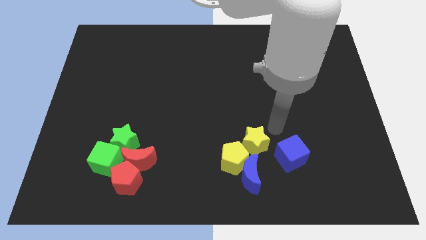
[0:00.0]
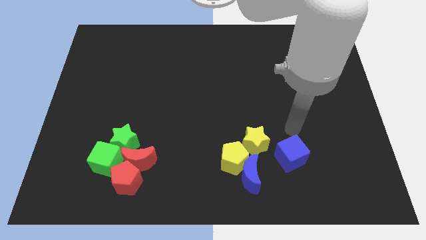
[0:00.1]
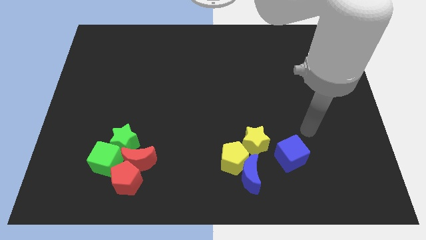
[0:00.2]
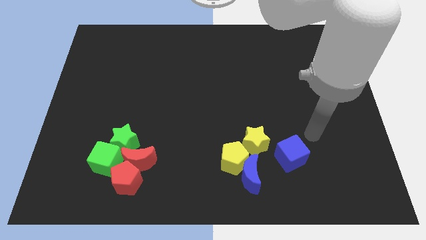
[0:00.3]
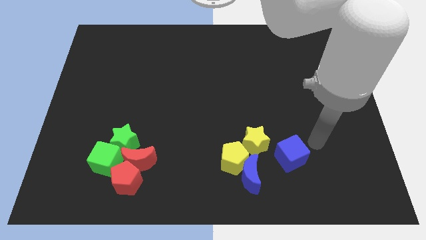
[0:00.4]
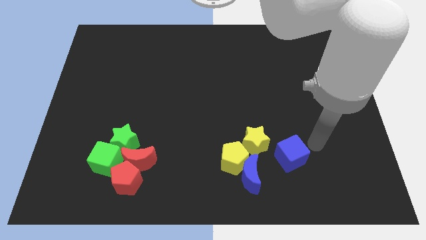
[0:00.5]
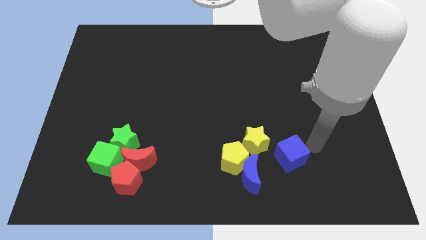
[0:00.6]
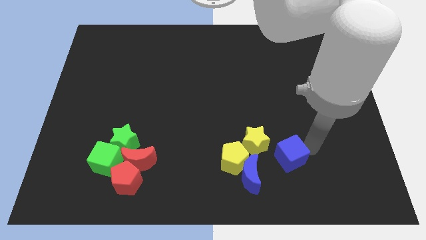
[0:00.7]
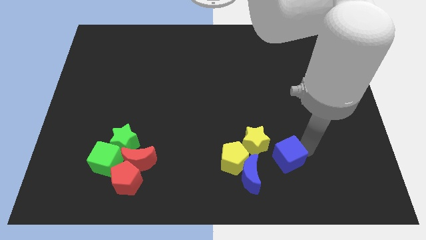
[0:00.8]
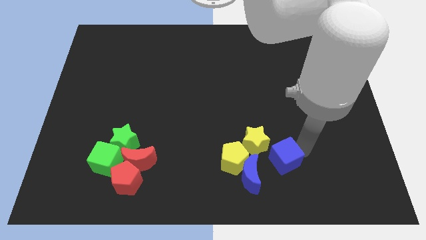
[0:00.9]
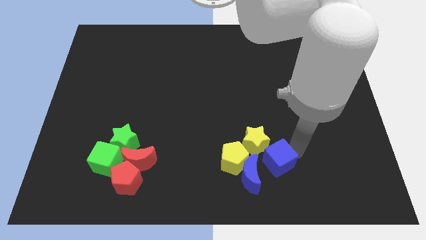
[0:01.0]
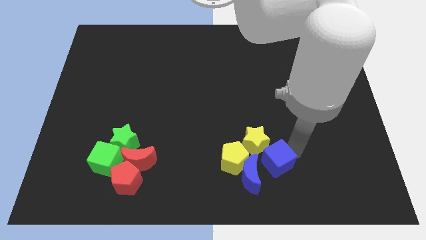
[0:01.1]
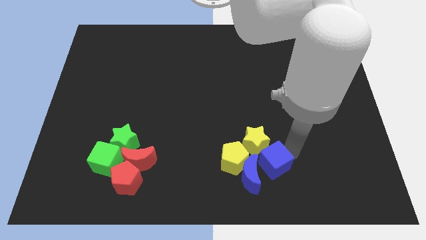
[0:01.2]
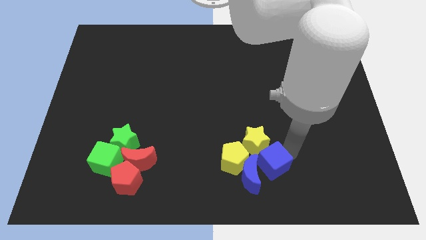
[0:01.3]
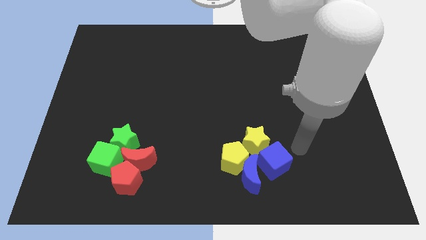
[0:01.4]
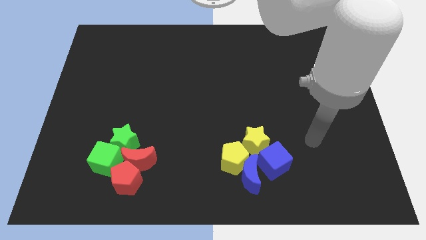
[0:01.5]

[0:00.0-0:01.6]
move the blue cube to the right side of the blue crescent

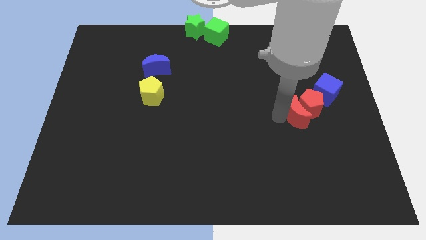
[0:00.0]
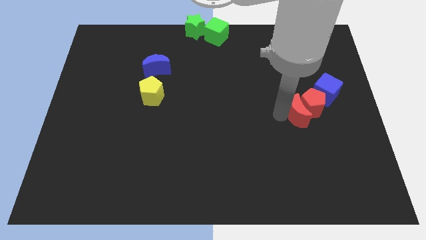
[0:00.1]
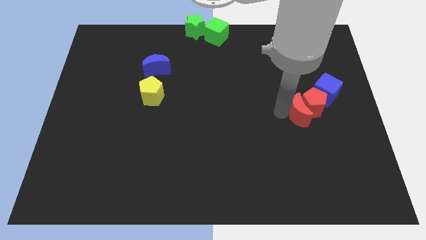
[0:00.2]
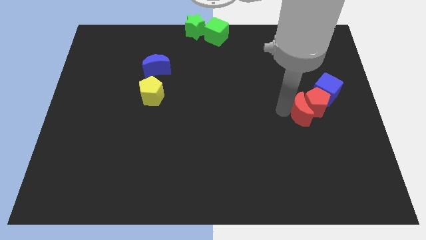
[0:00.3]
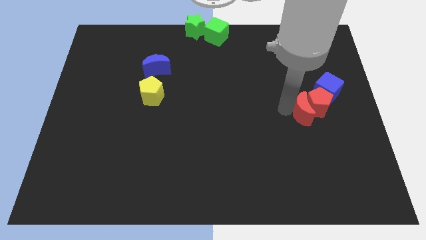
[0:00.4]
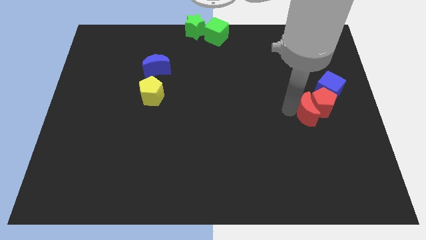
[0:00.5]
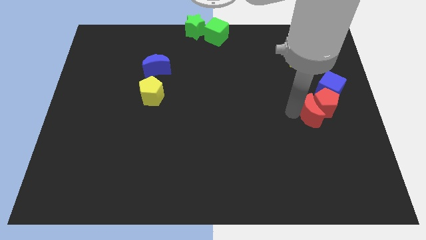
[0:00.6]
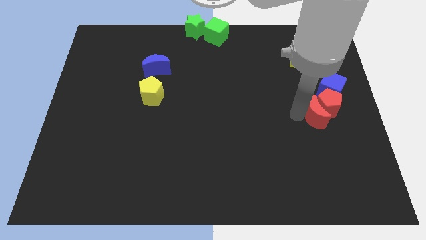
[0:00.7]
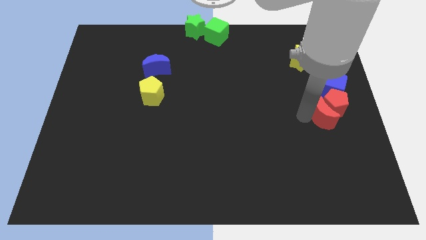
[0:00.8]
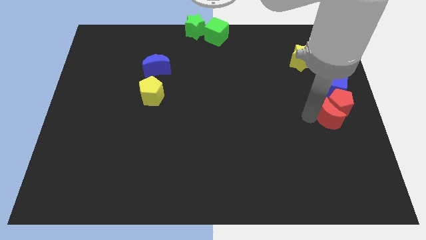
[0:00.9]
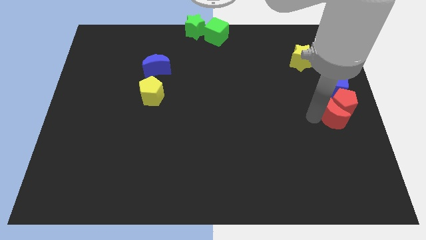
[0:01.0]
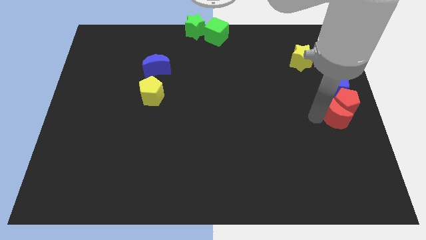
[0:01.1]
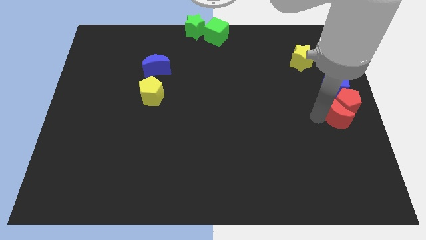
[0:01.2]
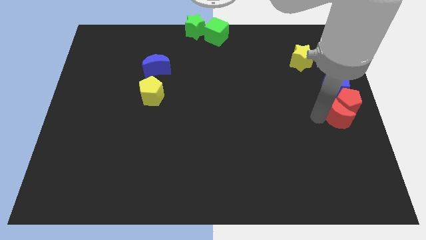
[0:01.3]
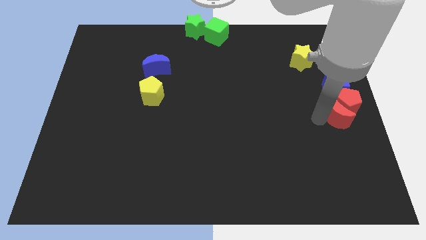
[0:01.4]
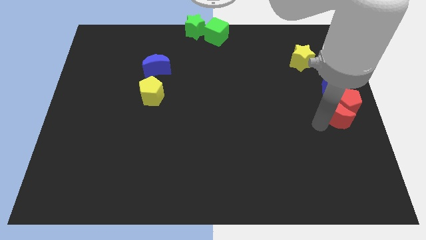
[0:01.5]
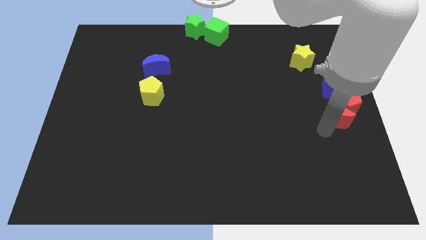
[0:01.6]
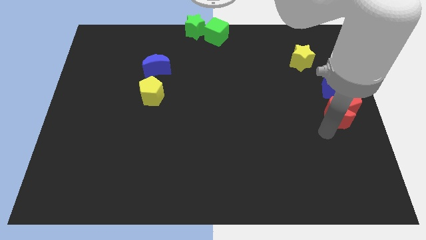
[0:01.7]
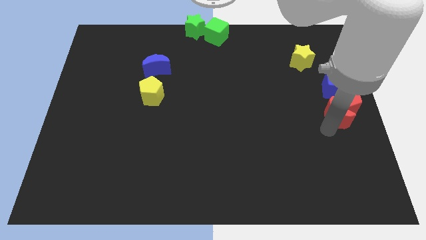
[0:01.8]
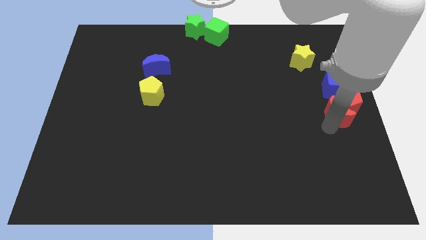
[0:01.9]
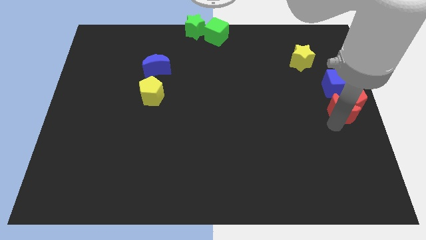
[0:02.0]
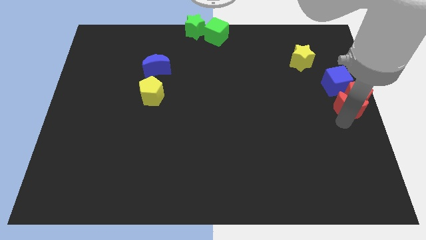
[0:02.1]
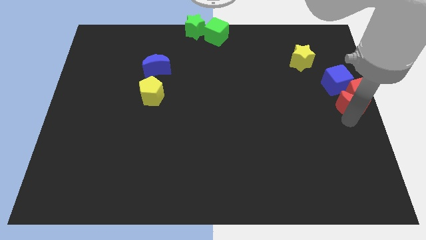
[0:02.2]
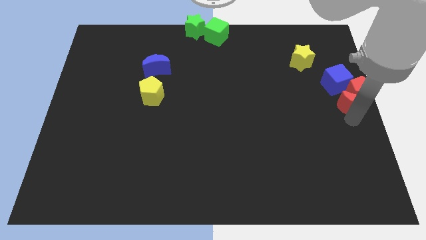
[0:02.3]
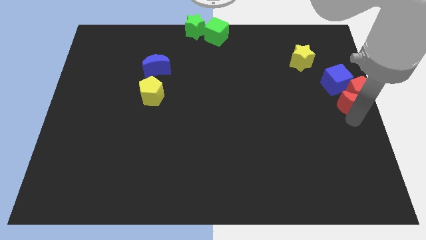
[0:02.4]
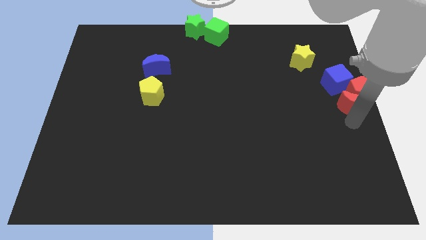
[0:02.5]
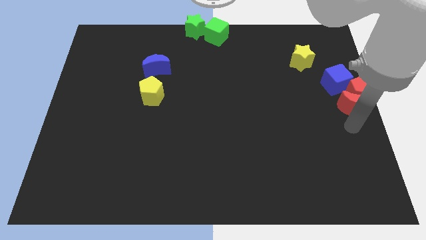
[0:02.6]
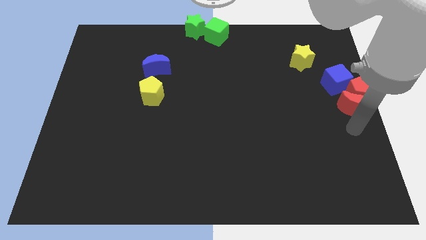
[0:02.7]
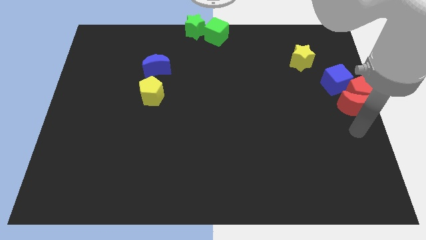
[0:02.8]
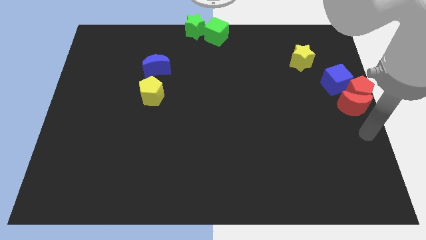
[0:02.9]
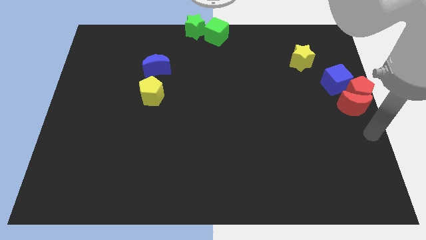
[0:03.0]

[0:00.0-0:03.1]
move the red blocks together to the center right of the board

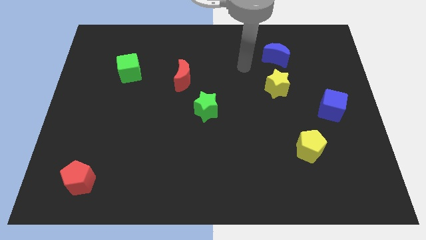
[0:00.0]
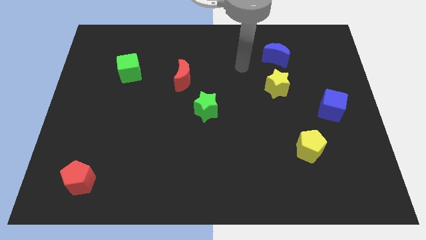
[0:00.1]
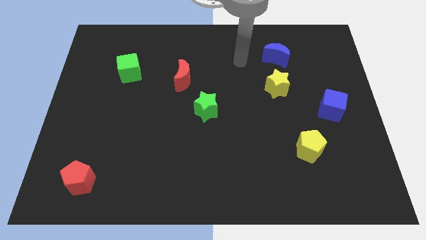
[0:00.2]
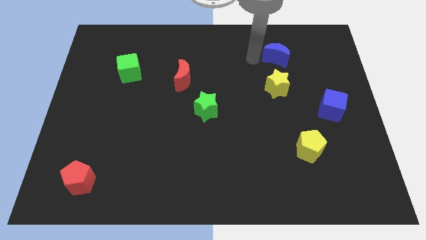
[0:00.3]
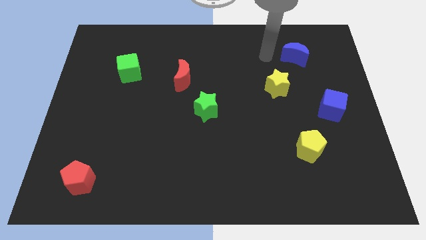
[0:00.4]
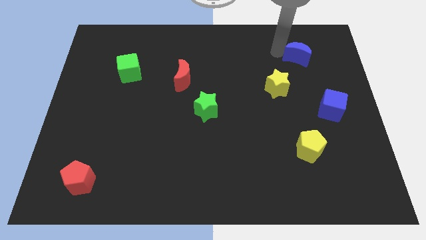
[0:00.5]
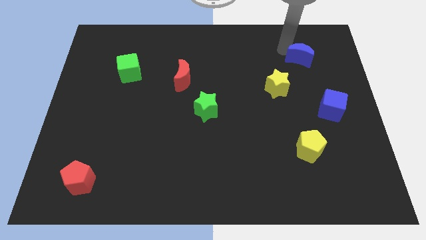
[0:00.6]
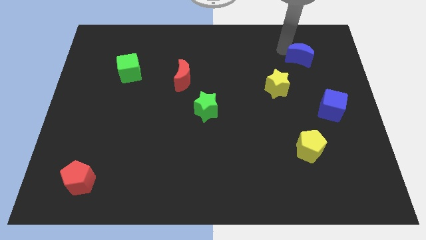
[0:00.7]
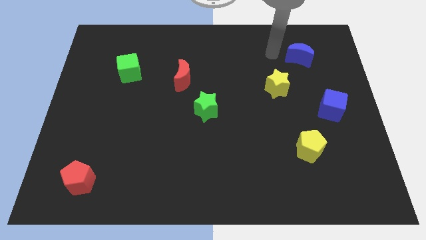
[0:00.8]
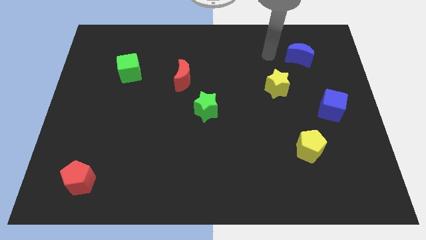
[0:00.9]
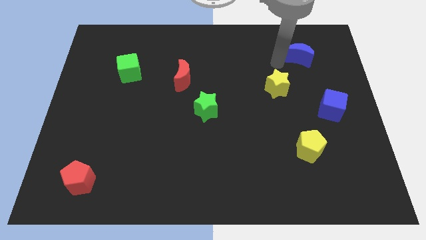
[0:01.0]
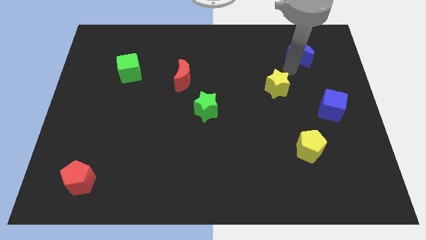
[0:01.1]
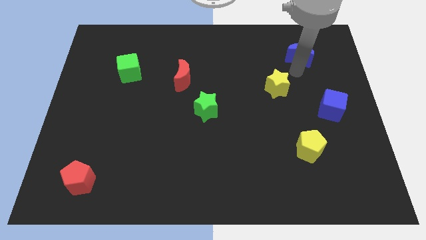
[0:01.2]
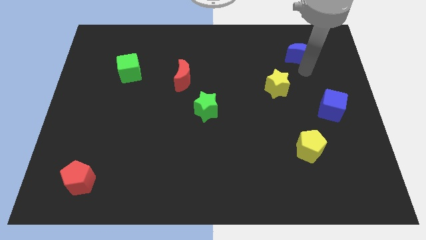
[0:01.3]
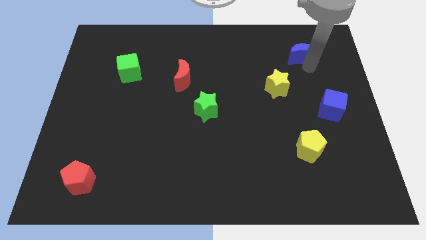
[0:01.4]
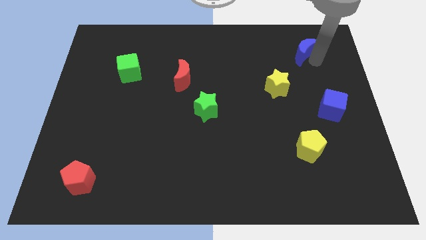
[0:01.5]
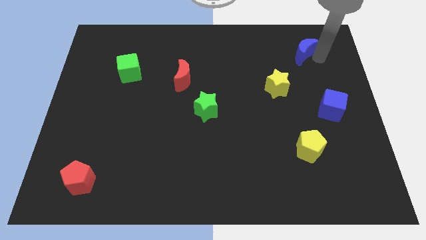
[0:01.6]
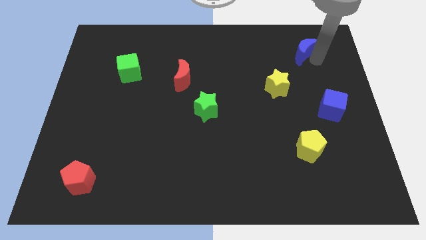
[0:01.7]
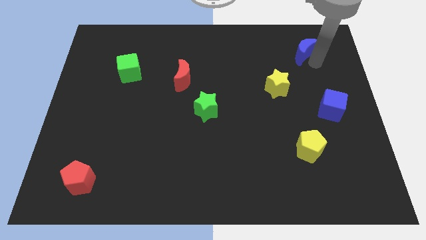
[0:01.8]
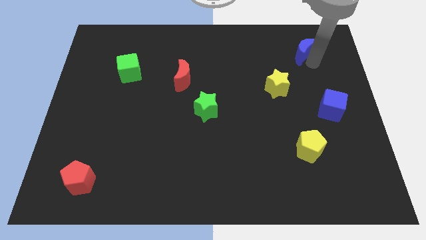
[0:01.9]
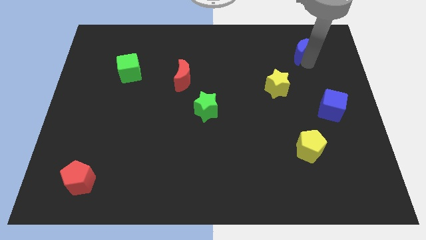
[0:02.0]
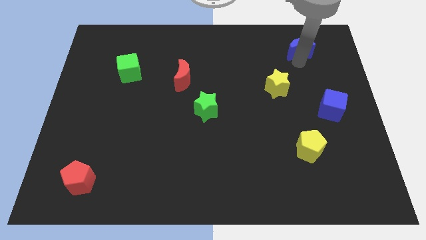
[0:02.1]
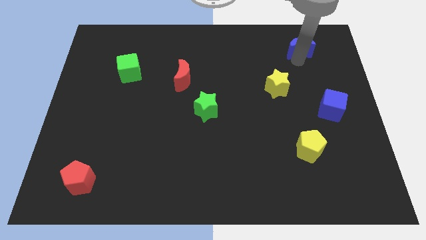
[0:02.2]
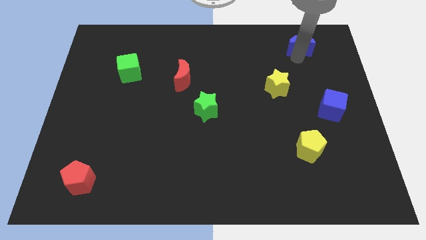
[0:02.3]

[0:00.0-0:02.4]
push the blue moon towards top right

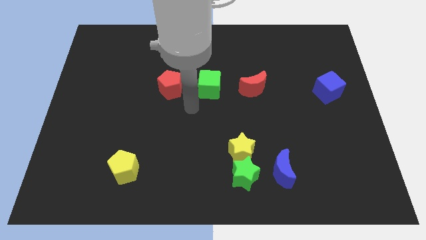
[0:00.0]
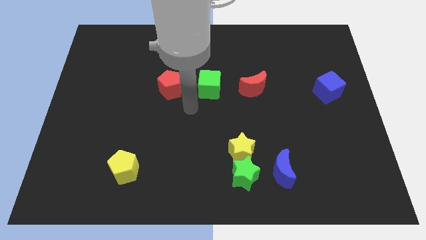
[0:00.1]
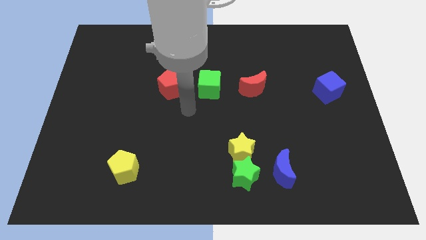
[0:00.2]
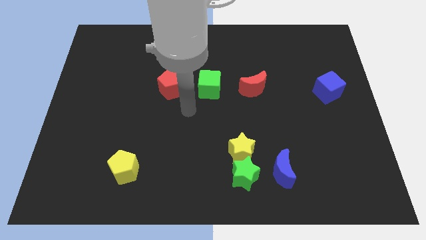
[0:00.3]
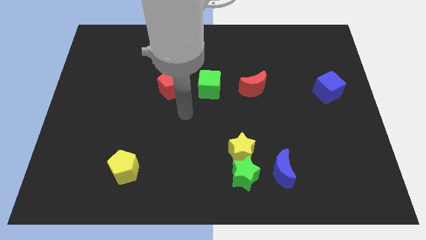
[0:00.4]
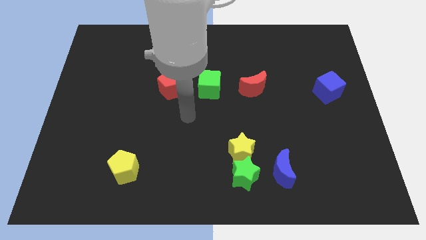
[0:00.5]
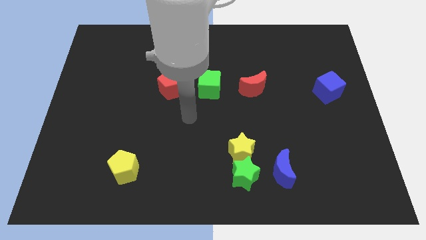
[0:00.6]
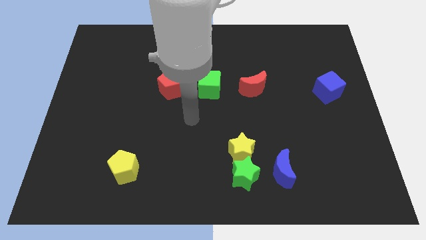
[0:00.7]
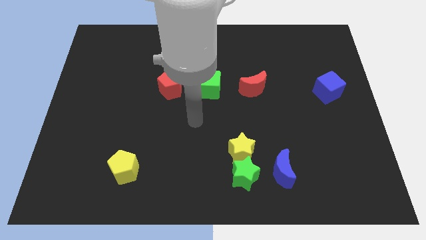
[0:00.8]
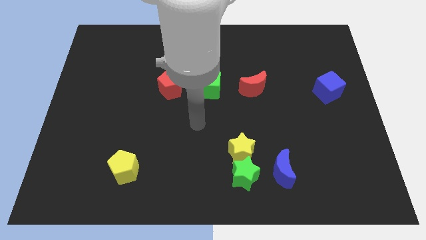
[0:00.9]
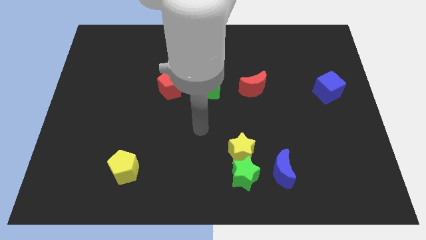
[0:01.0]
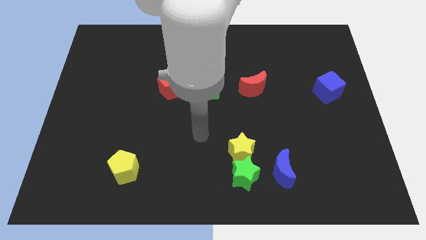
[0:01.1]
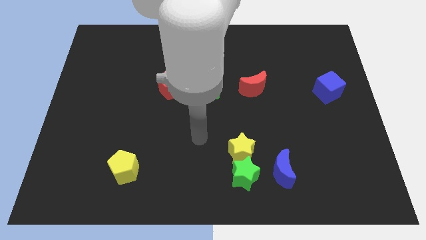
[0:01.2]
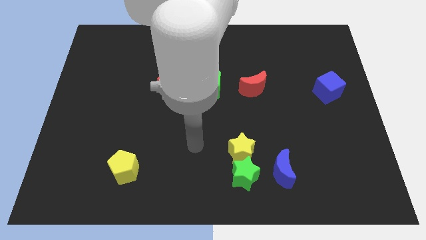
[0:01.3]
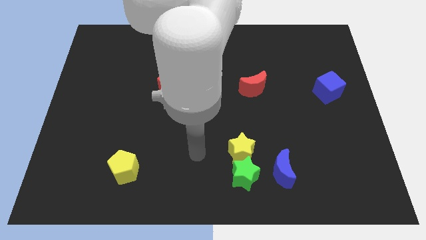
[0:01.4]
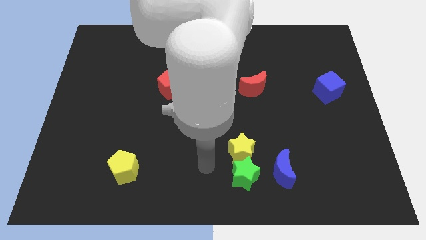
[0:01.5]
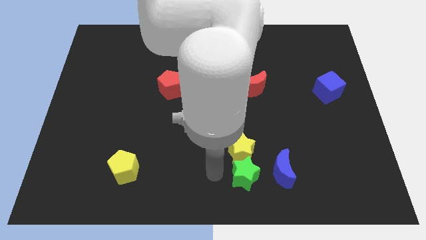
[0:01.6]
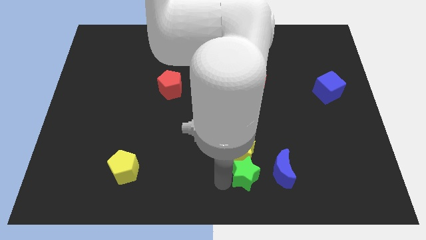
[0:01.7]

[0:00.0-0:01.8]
place your arm to the left of green star
